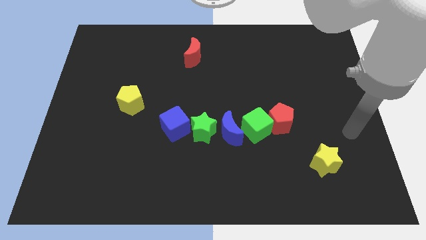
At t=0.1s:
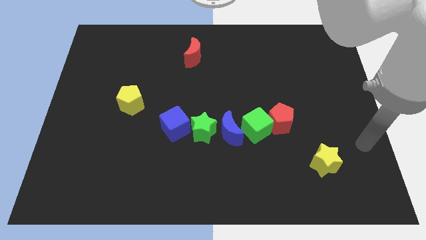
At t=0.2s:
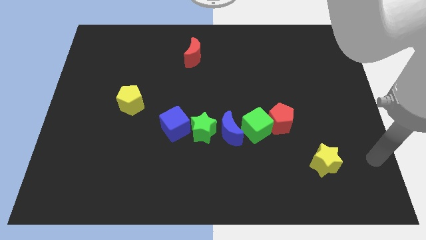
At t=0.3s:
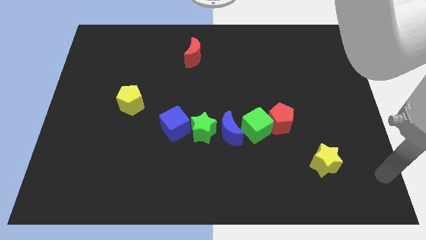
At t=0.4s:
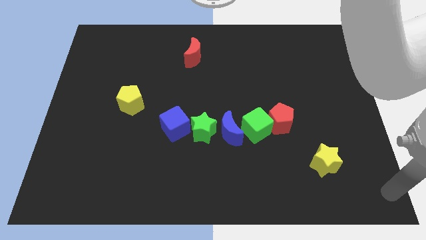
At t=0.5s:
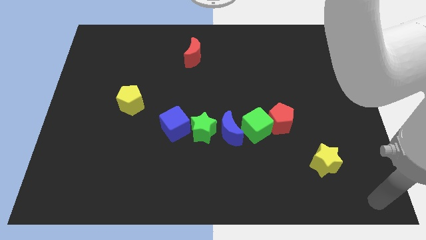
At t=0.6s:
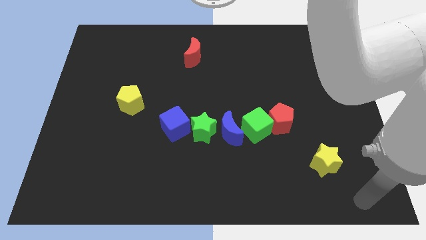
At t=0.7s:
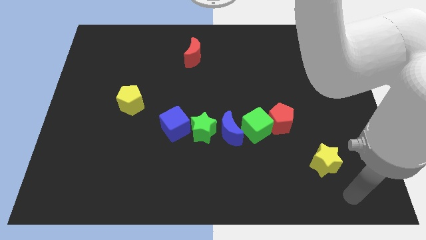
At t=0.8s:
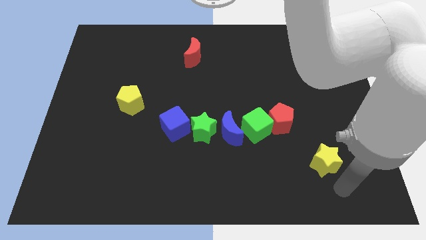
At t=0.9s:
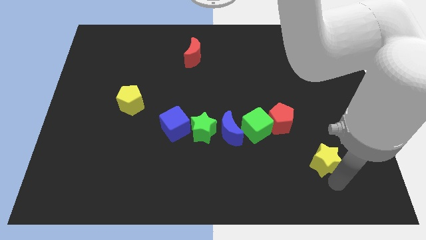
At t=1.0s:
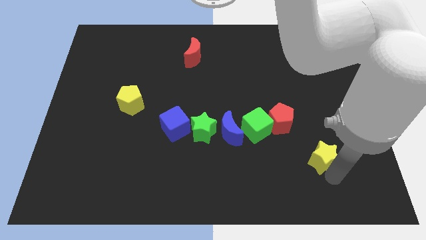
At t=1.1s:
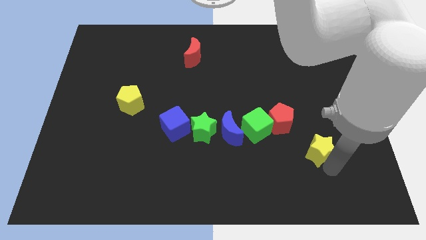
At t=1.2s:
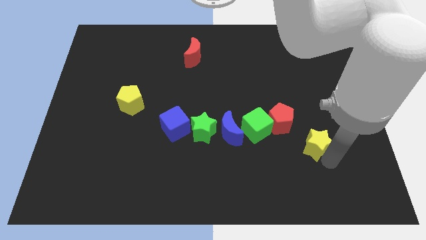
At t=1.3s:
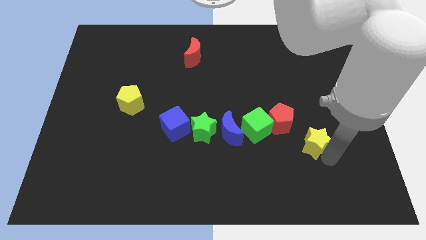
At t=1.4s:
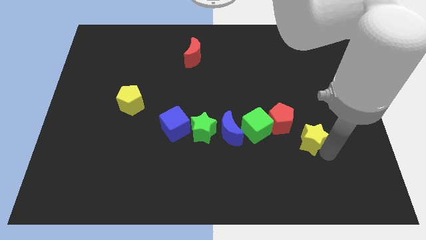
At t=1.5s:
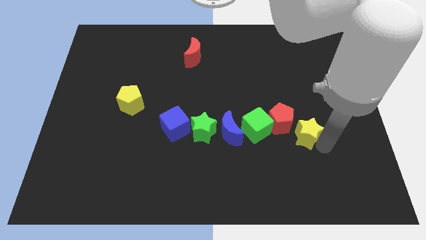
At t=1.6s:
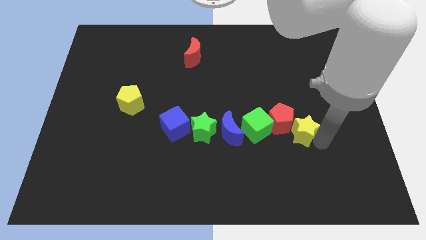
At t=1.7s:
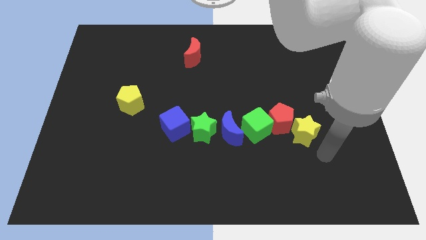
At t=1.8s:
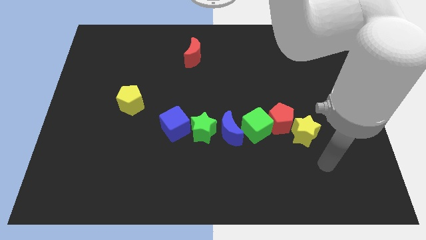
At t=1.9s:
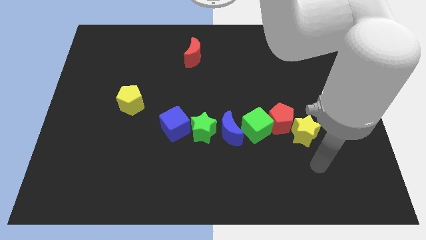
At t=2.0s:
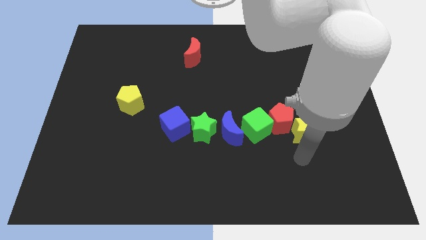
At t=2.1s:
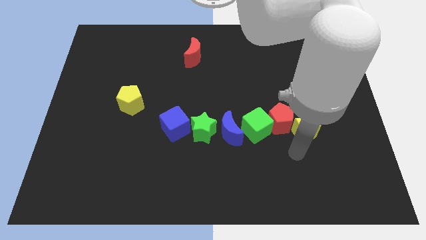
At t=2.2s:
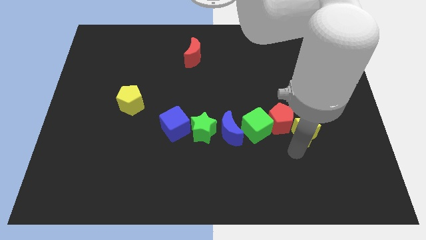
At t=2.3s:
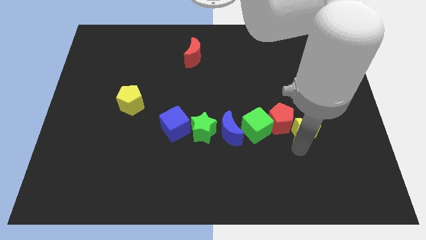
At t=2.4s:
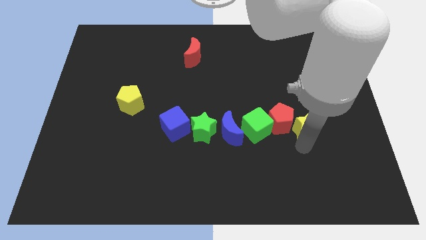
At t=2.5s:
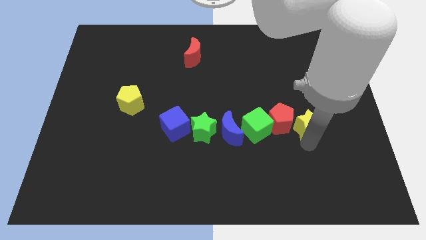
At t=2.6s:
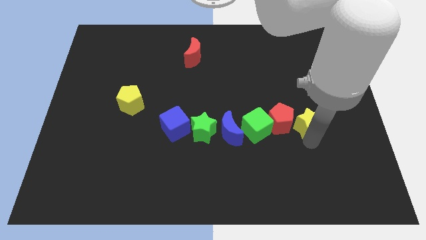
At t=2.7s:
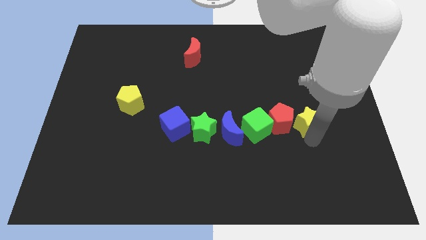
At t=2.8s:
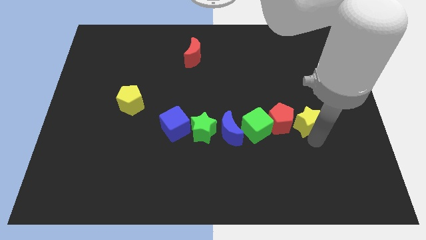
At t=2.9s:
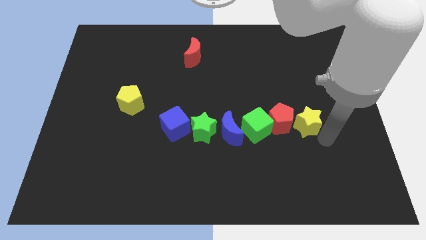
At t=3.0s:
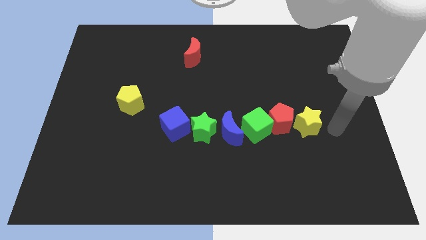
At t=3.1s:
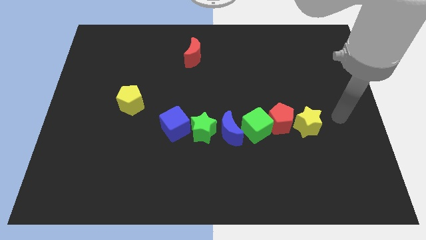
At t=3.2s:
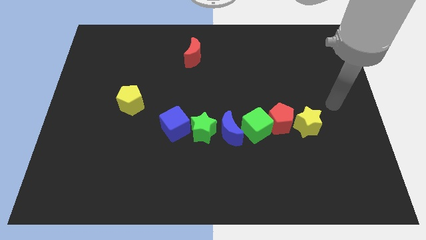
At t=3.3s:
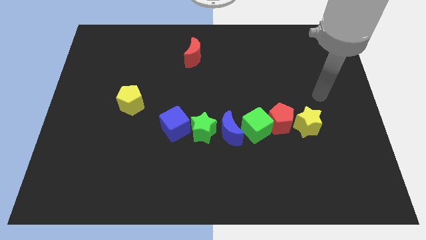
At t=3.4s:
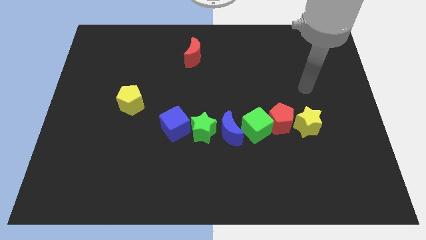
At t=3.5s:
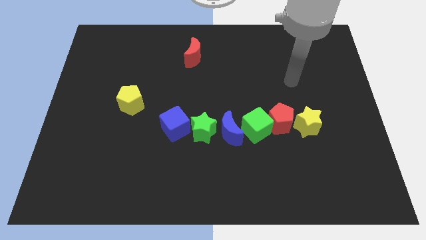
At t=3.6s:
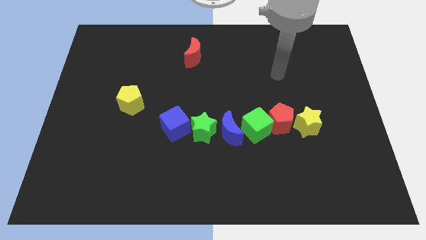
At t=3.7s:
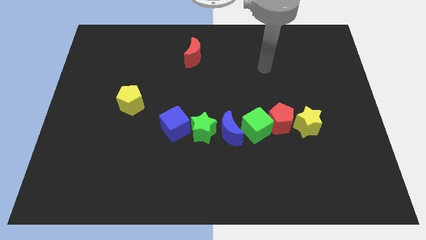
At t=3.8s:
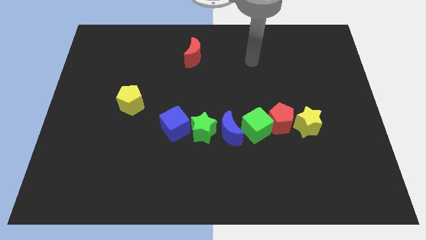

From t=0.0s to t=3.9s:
place the yellow star beside the red pentagon

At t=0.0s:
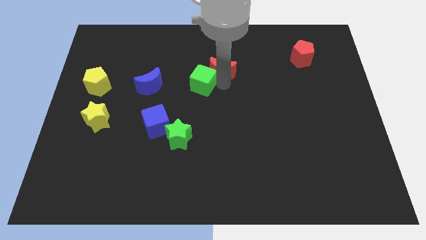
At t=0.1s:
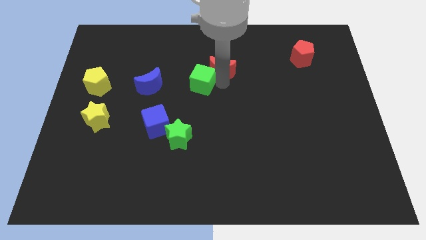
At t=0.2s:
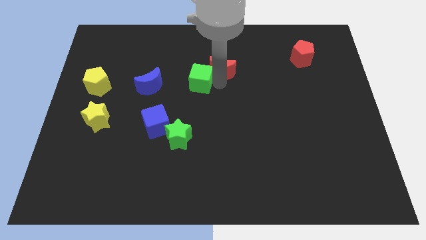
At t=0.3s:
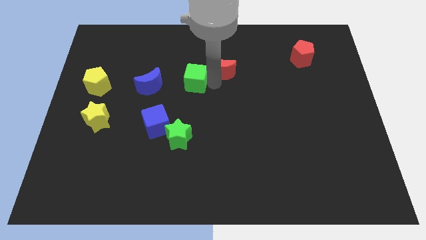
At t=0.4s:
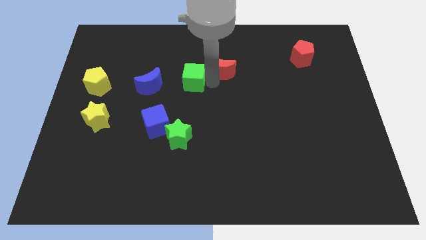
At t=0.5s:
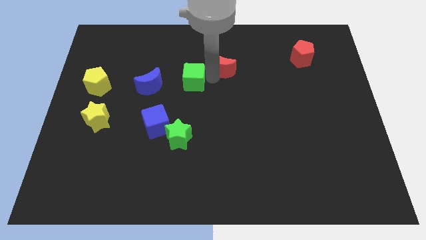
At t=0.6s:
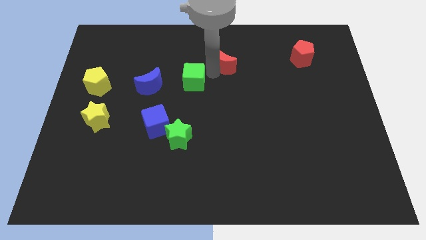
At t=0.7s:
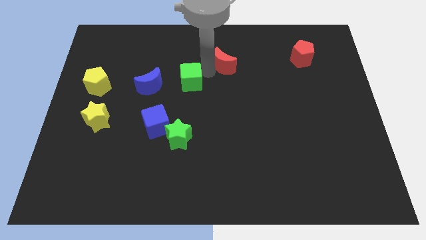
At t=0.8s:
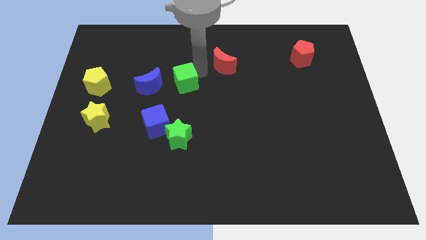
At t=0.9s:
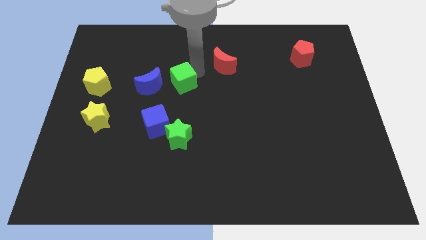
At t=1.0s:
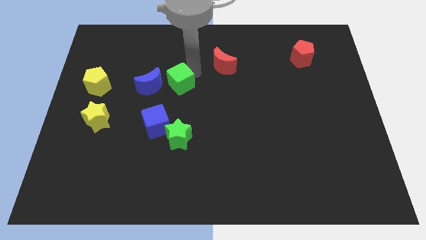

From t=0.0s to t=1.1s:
move green cube right beside the blue moon

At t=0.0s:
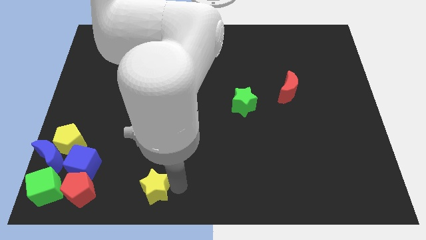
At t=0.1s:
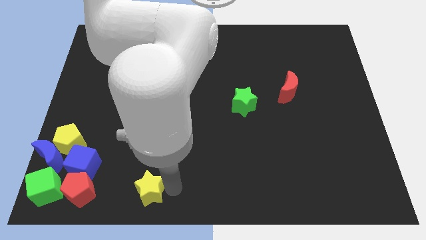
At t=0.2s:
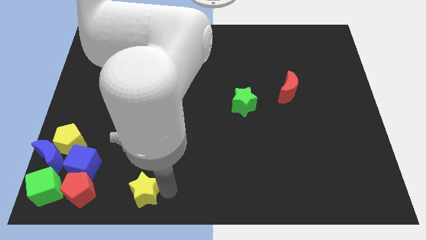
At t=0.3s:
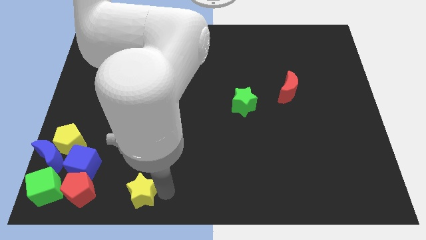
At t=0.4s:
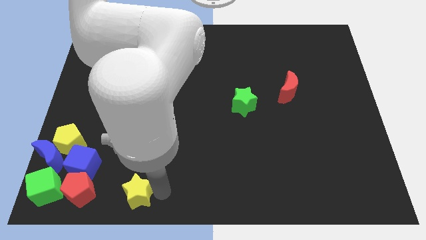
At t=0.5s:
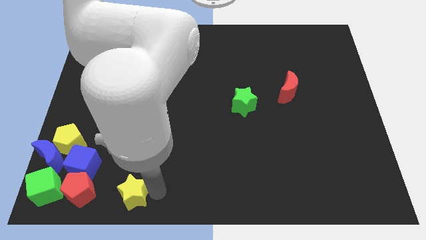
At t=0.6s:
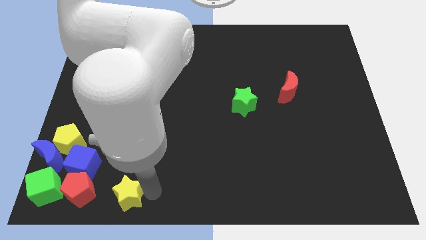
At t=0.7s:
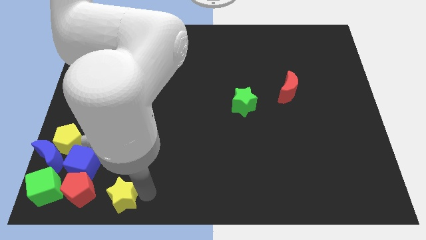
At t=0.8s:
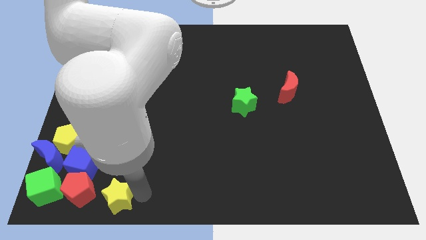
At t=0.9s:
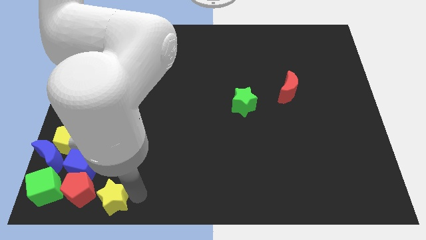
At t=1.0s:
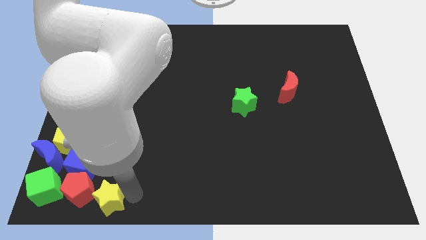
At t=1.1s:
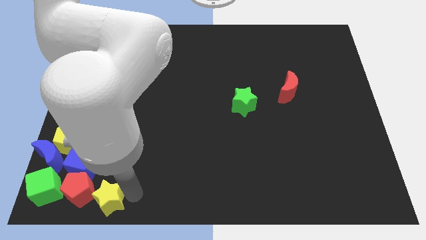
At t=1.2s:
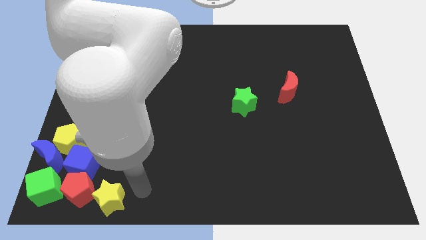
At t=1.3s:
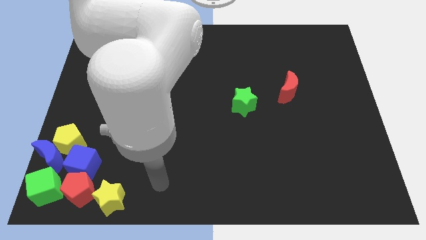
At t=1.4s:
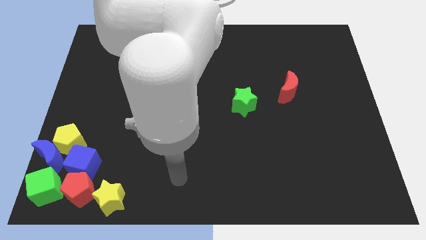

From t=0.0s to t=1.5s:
place the yellow star right to the red pentagon

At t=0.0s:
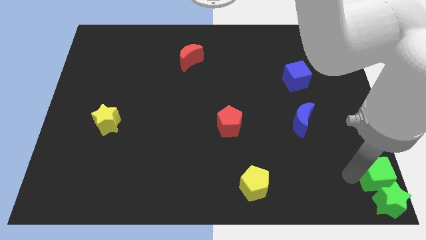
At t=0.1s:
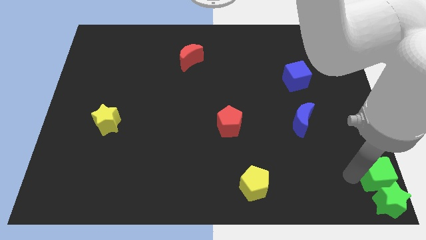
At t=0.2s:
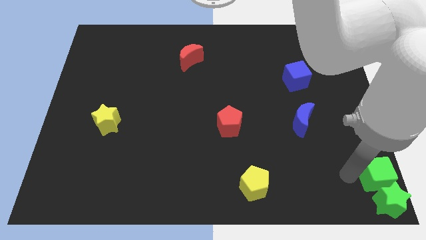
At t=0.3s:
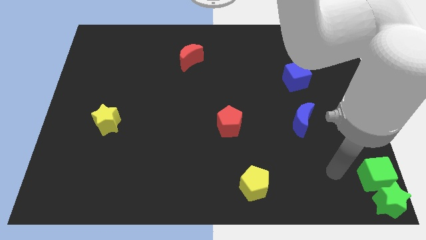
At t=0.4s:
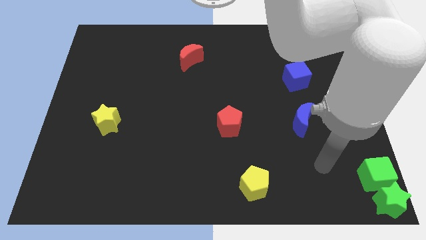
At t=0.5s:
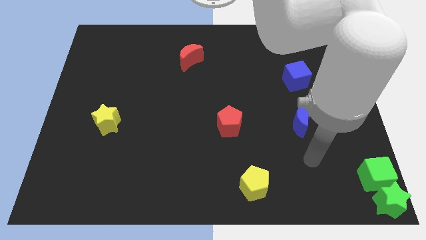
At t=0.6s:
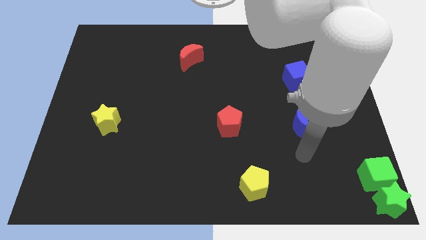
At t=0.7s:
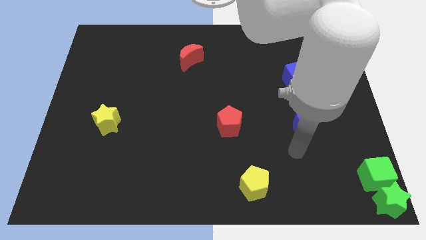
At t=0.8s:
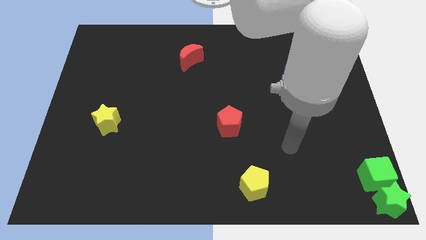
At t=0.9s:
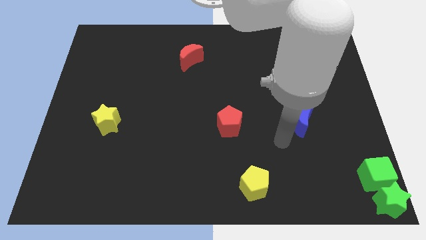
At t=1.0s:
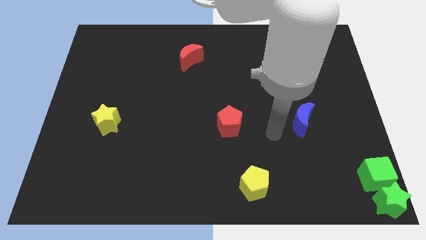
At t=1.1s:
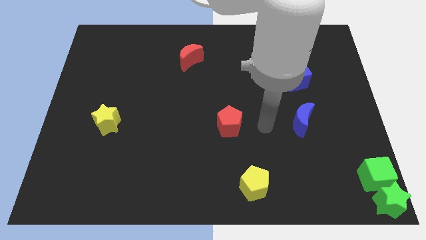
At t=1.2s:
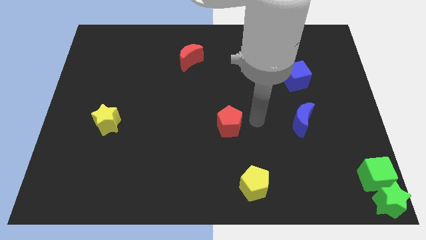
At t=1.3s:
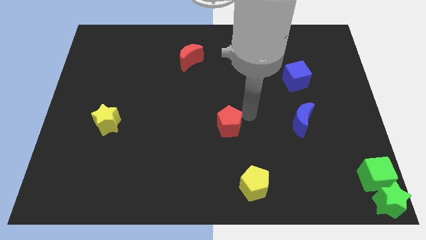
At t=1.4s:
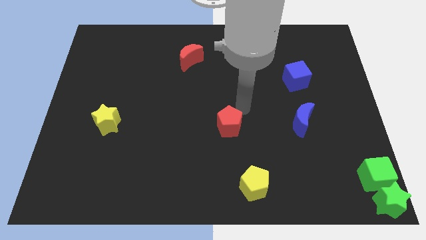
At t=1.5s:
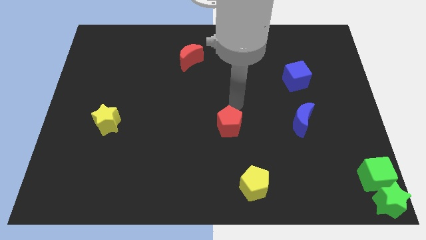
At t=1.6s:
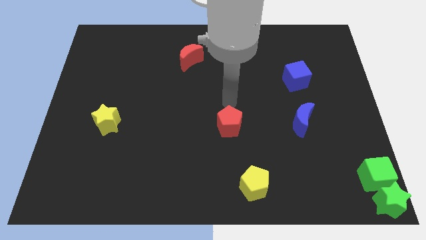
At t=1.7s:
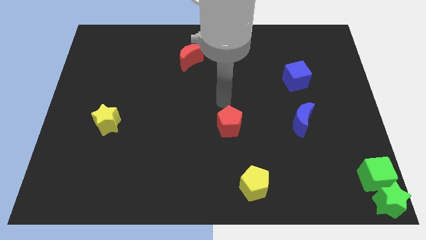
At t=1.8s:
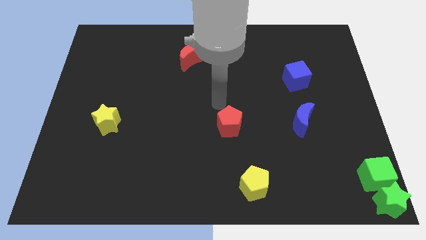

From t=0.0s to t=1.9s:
move your arm on top of the red pentagon

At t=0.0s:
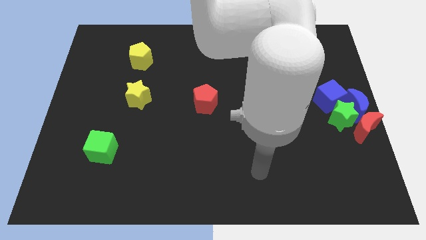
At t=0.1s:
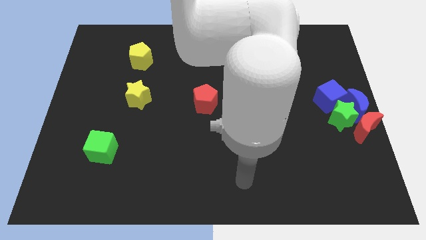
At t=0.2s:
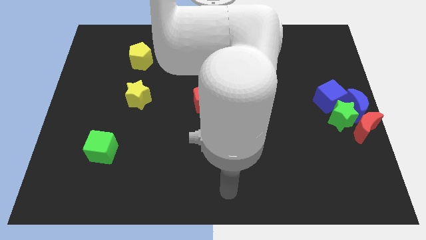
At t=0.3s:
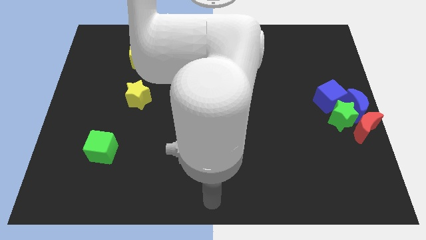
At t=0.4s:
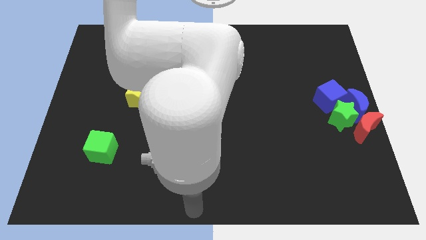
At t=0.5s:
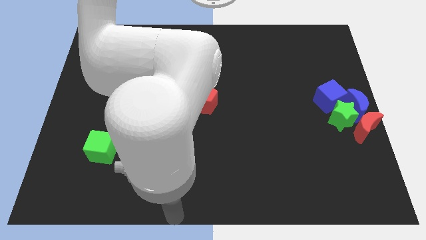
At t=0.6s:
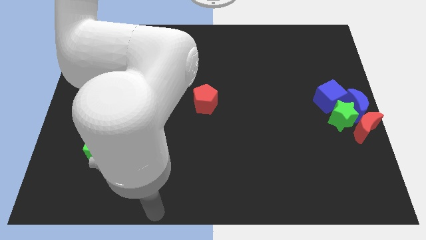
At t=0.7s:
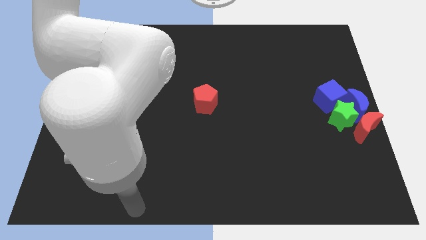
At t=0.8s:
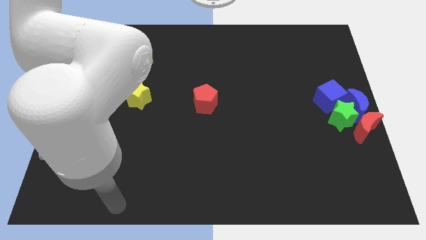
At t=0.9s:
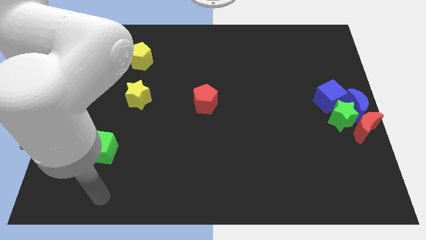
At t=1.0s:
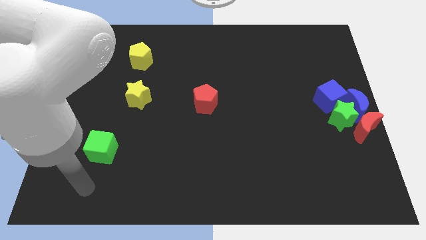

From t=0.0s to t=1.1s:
move the arm to the bottom of the green cube
